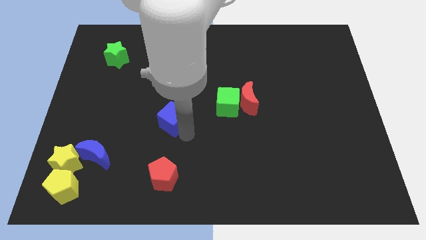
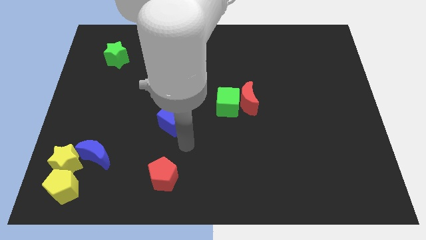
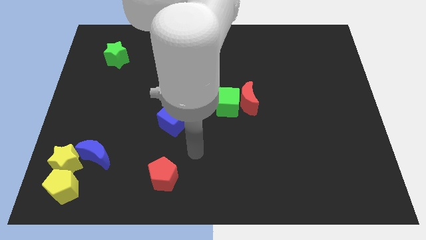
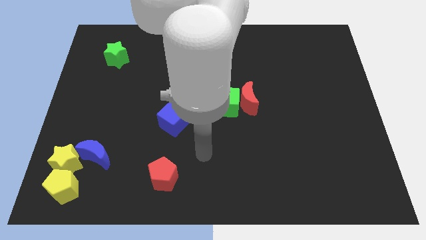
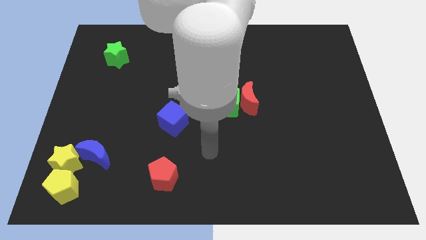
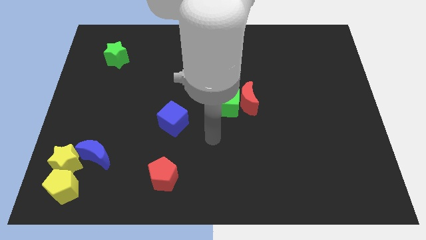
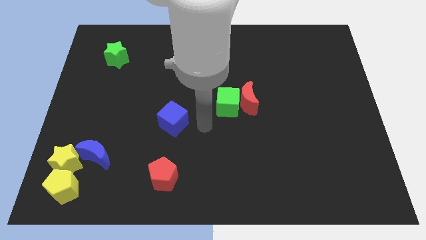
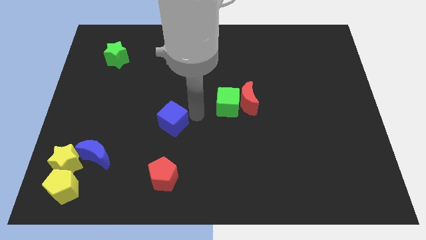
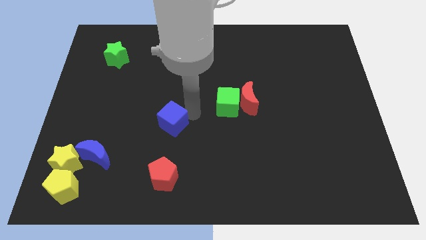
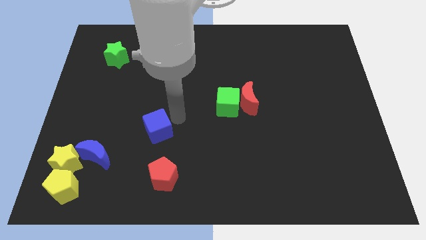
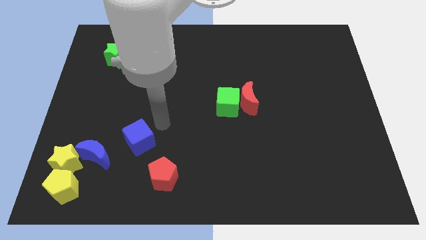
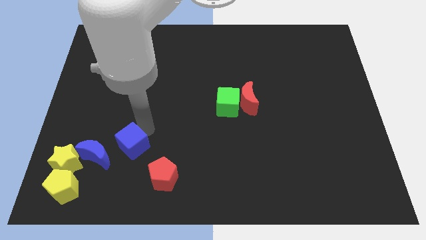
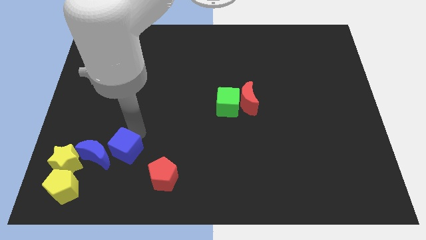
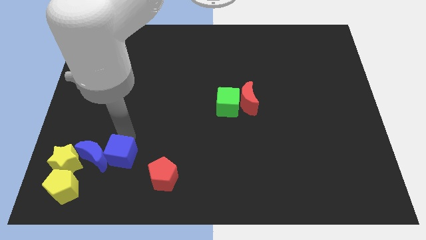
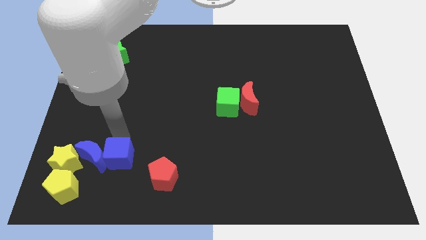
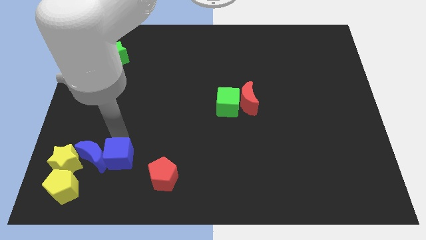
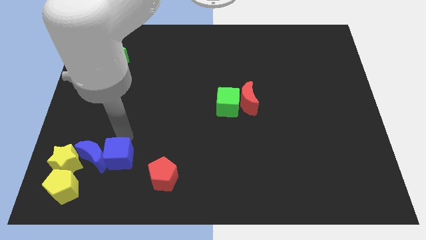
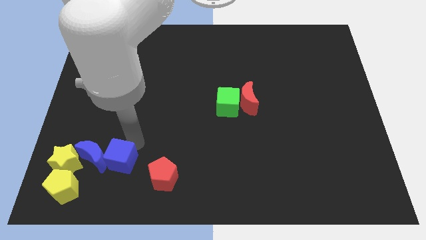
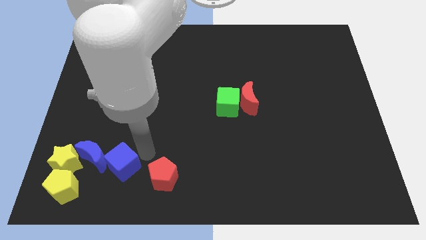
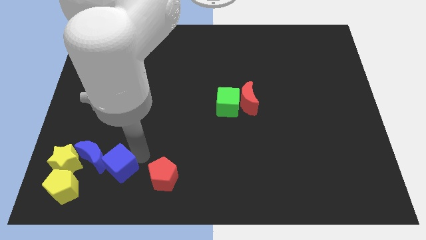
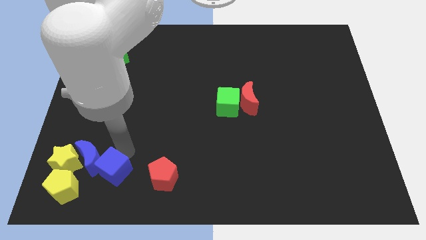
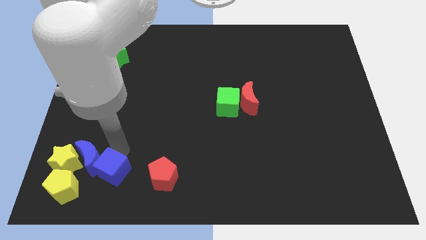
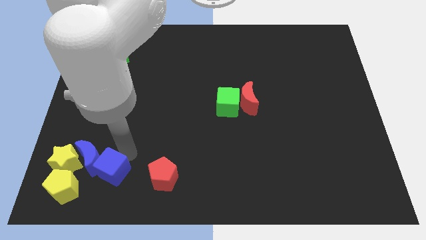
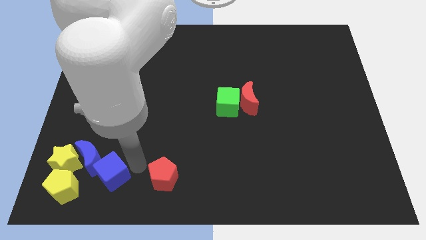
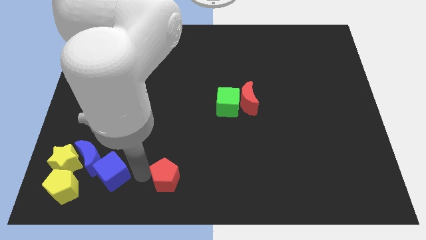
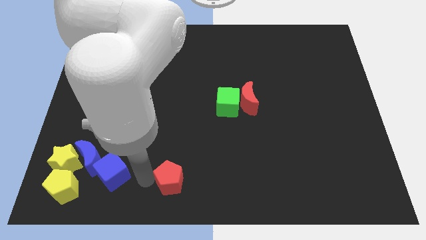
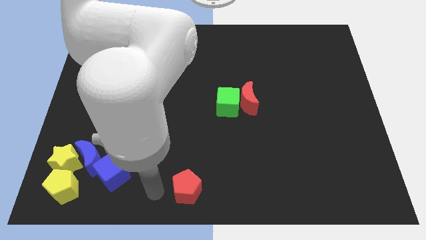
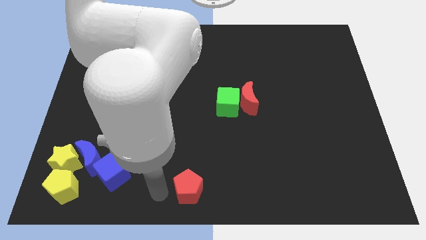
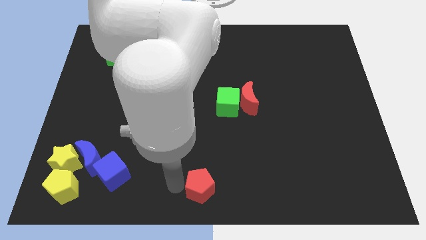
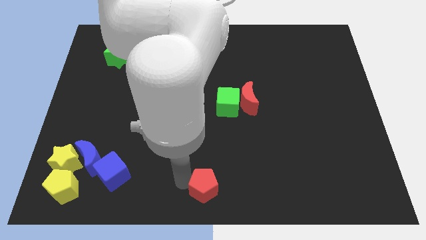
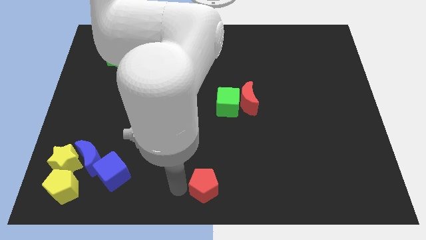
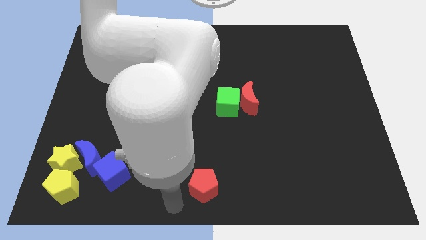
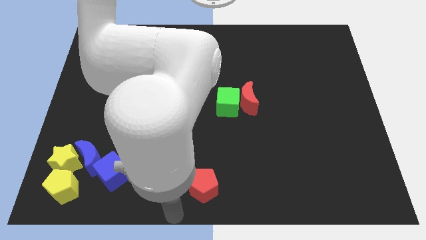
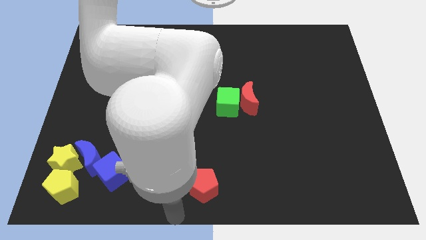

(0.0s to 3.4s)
slide the red pentagon to the bottom center of the board

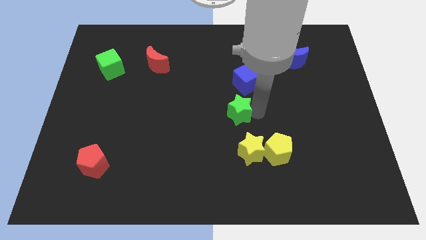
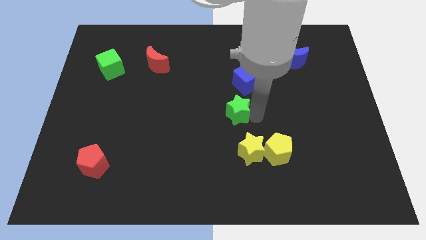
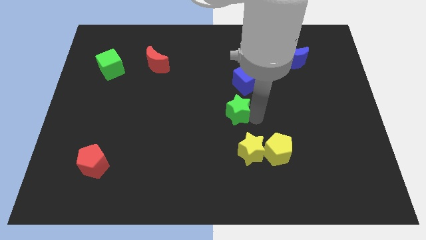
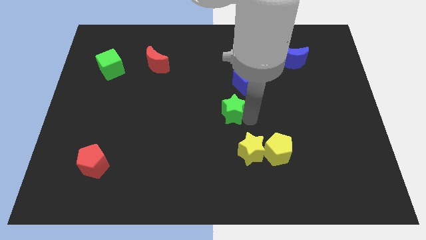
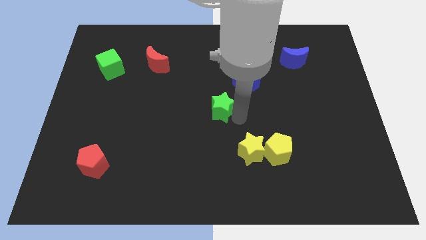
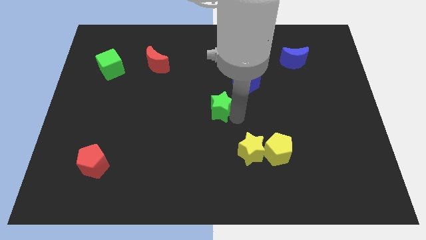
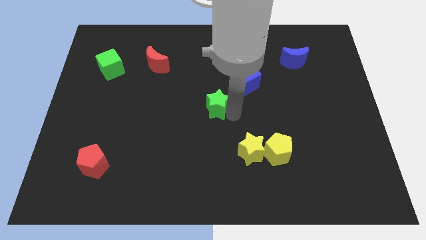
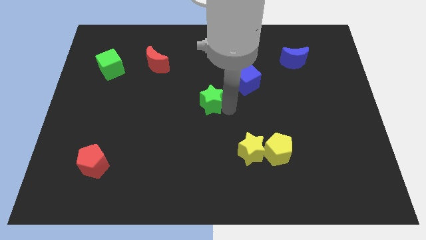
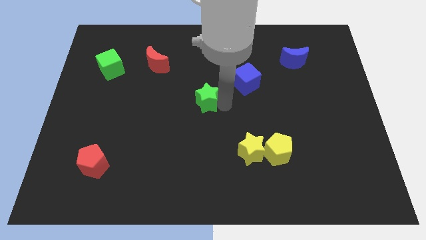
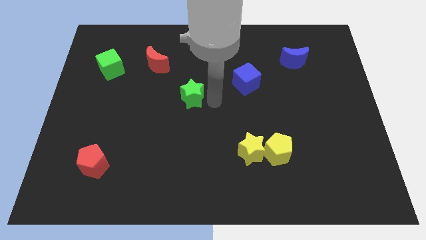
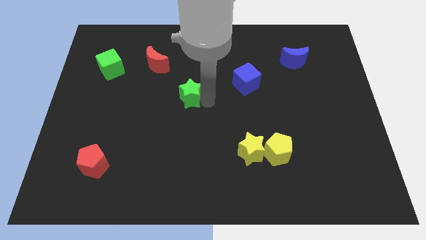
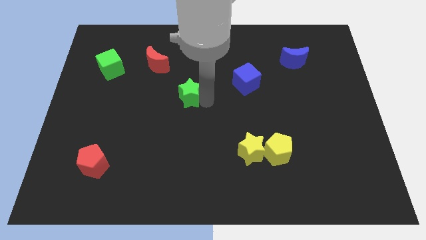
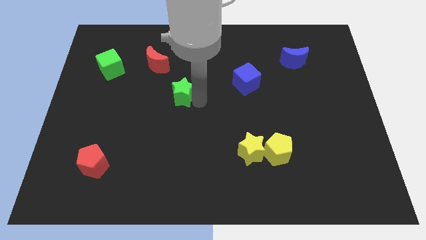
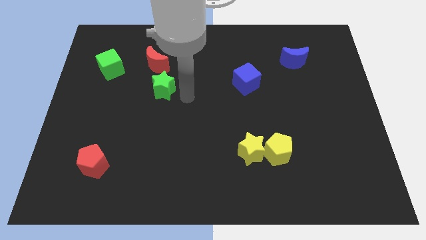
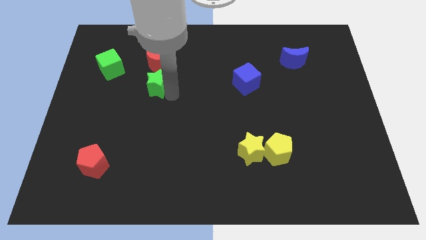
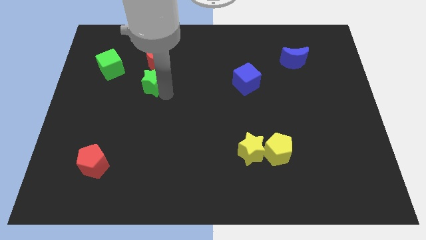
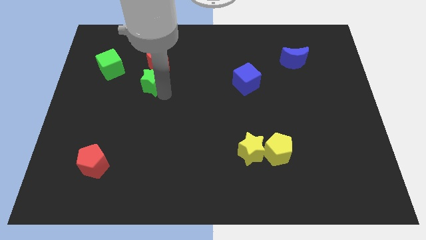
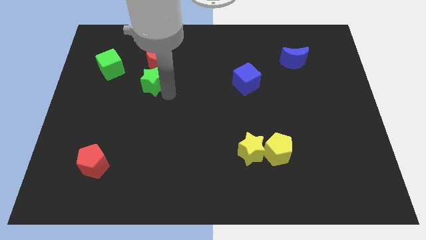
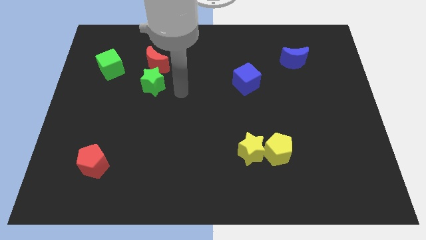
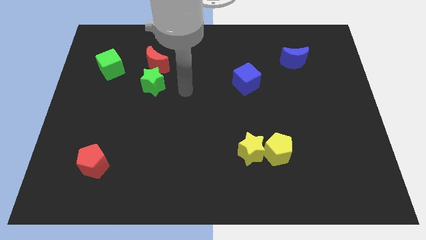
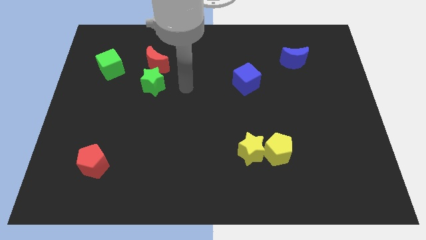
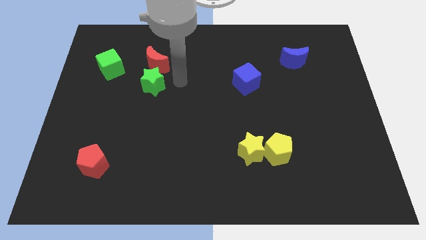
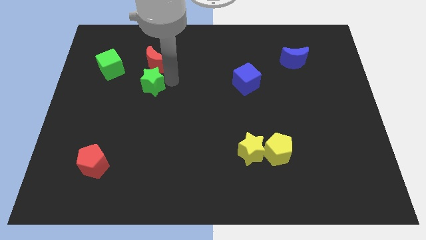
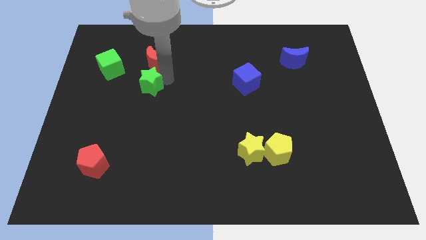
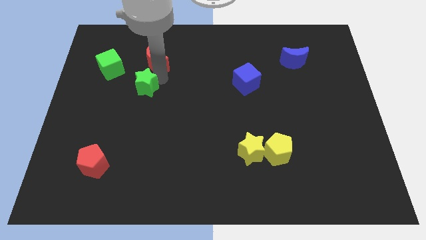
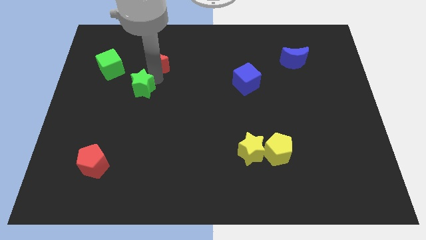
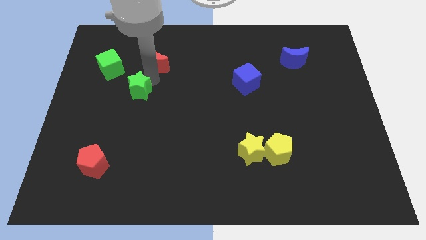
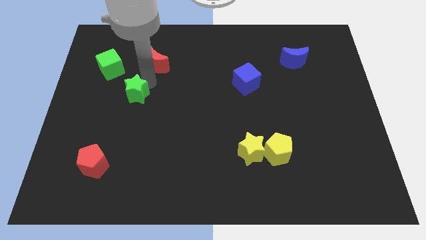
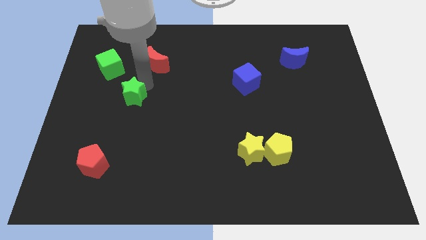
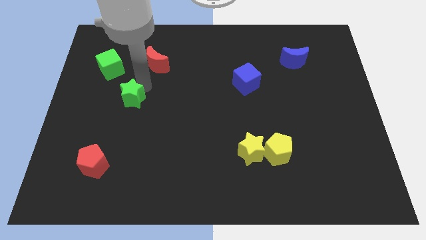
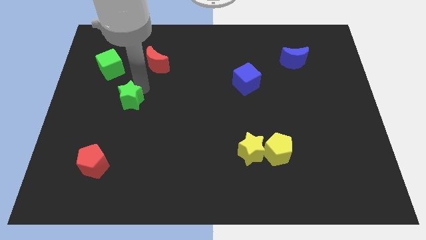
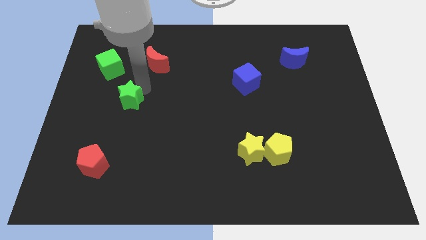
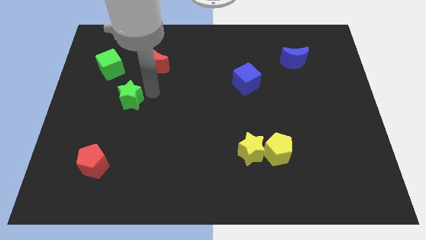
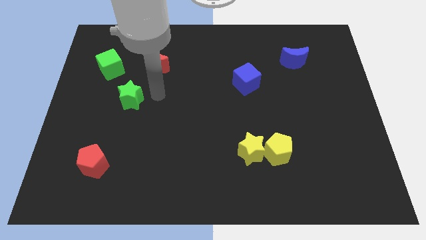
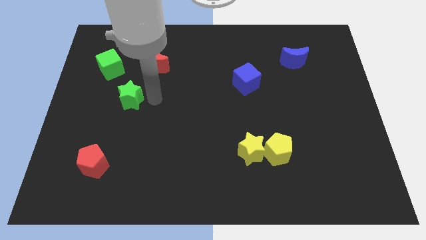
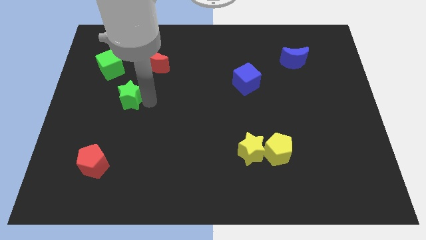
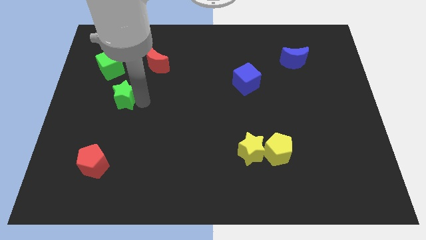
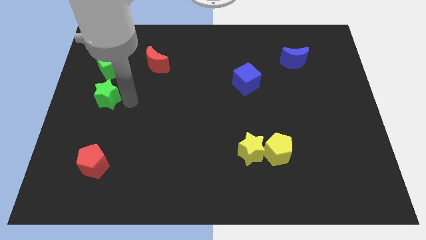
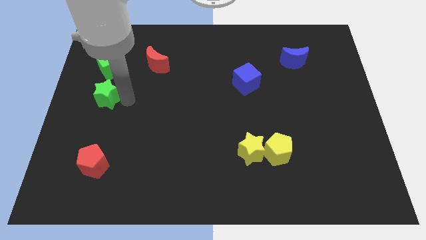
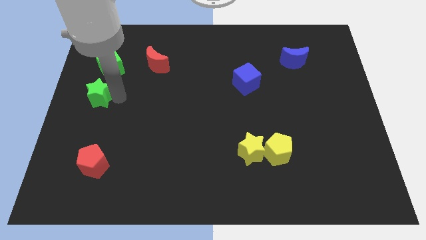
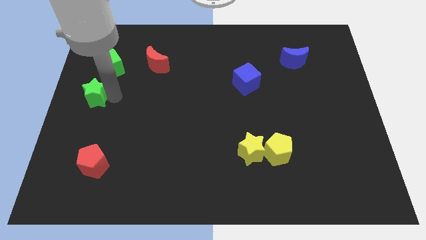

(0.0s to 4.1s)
place the green star below the green cube

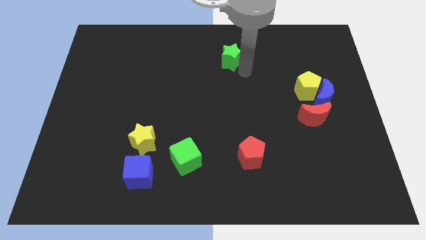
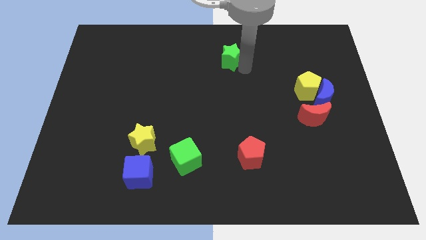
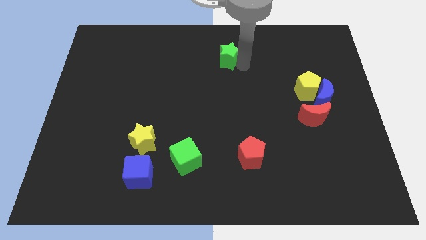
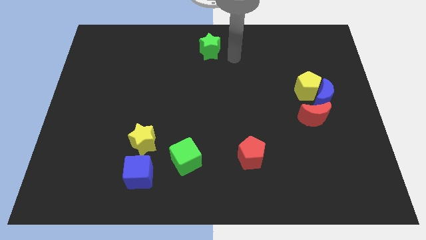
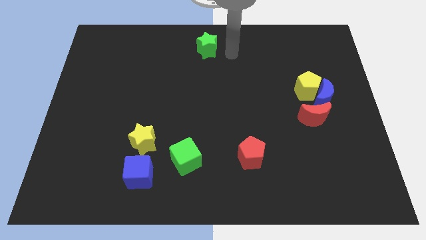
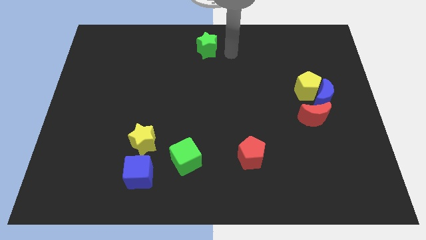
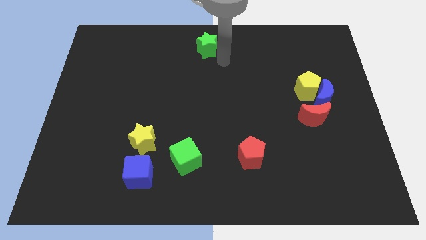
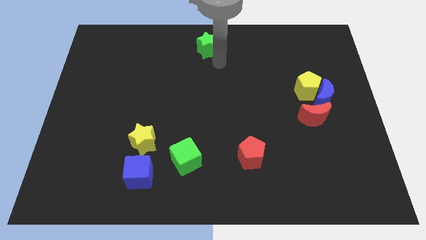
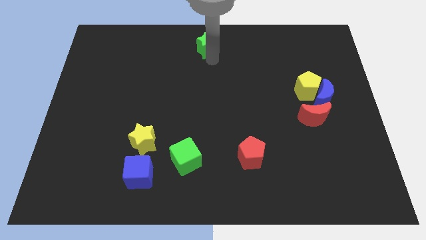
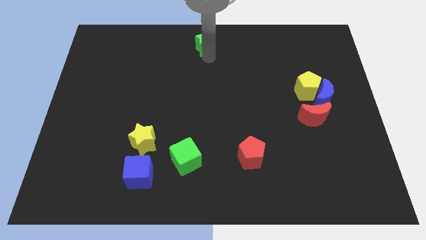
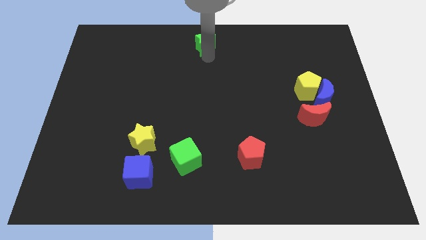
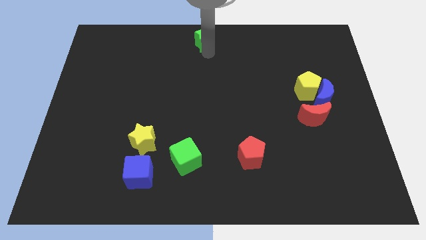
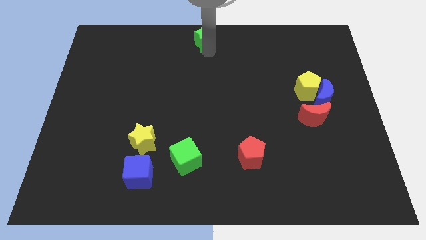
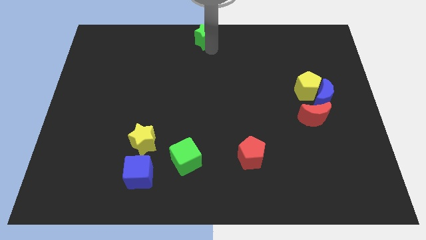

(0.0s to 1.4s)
push the green star to the top center of the board
